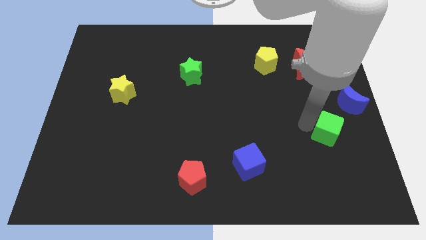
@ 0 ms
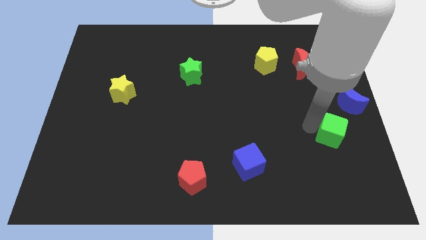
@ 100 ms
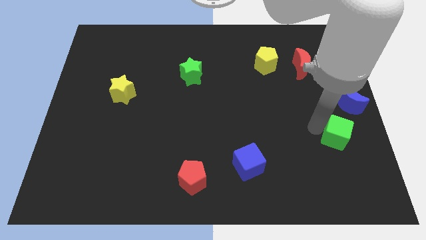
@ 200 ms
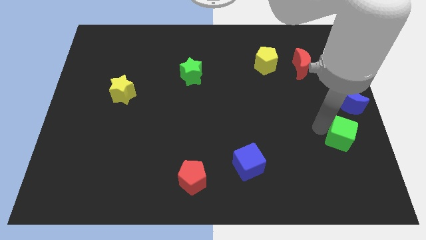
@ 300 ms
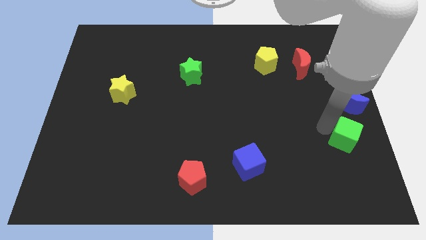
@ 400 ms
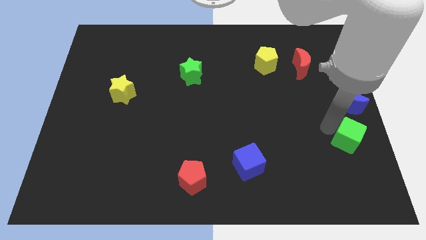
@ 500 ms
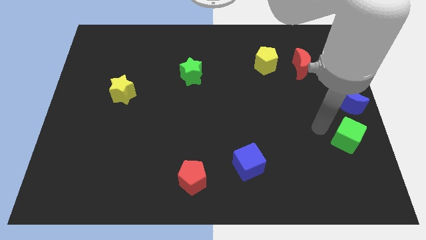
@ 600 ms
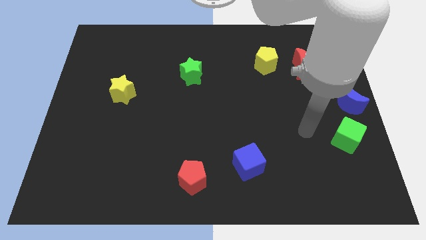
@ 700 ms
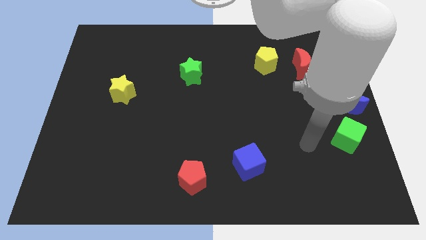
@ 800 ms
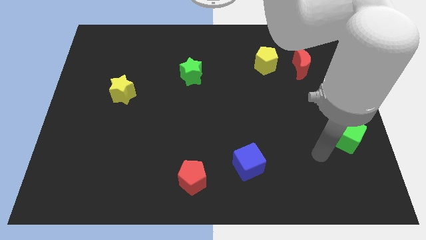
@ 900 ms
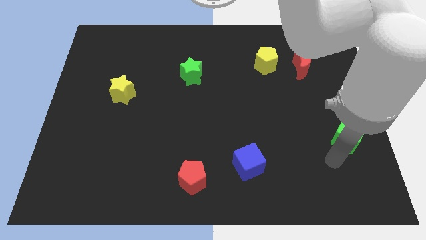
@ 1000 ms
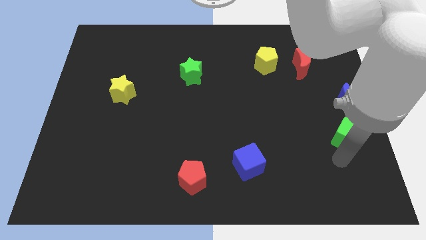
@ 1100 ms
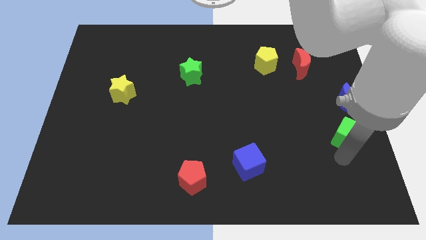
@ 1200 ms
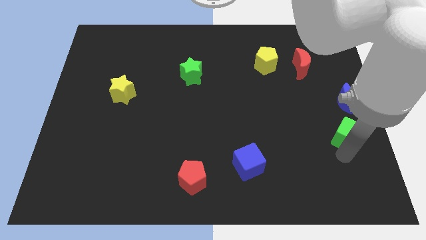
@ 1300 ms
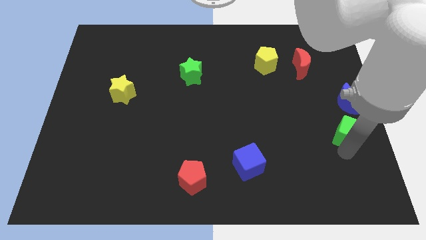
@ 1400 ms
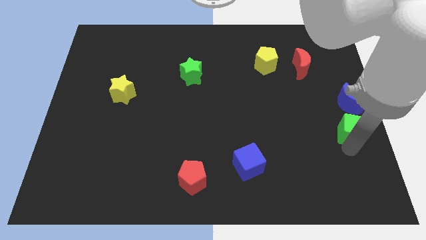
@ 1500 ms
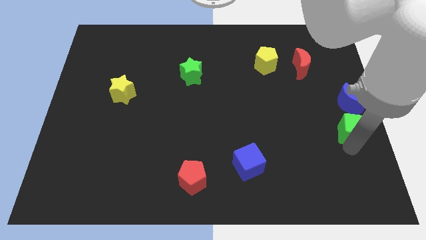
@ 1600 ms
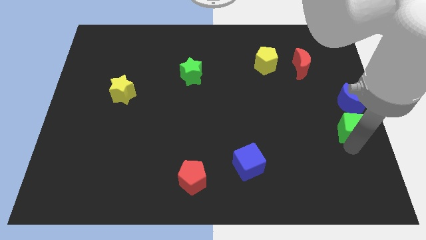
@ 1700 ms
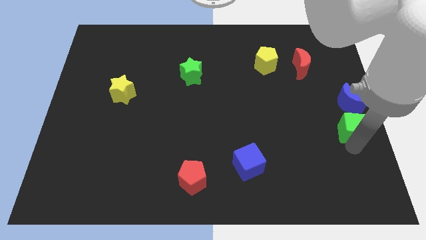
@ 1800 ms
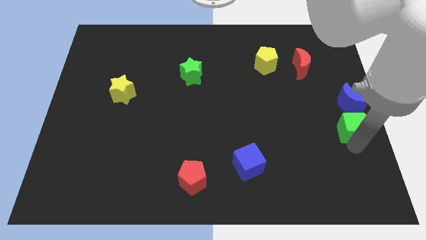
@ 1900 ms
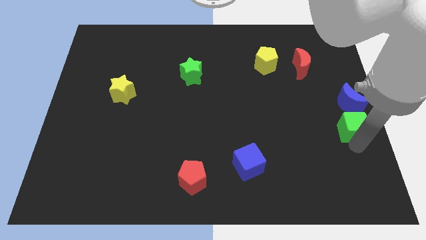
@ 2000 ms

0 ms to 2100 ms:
slide green cube below blue moon

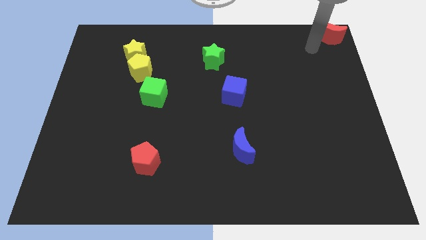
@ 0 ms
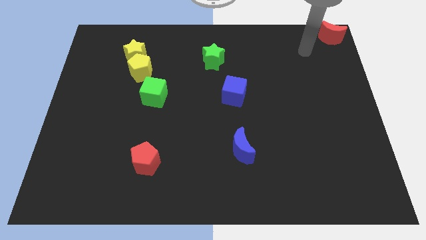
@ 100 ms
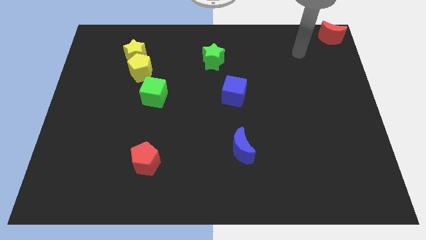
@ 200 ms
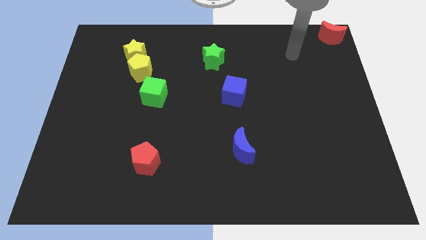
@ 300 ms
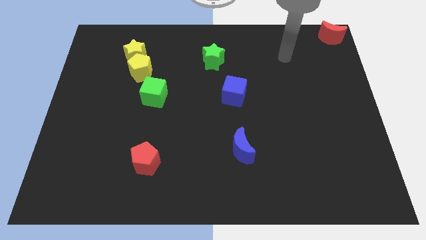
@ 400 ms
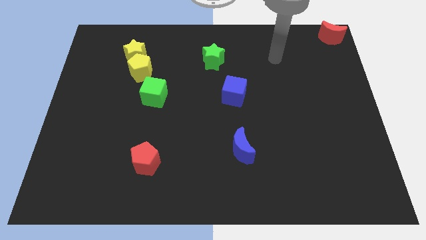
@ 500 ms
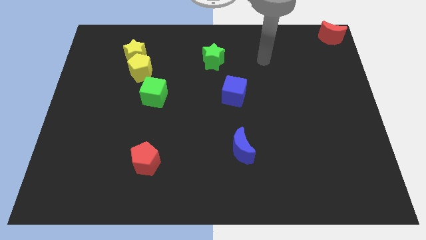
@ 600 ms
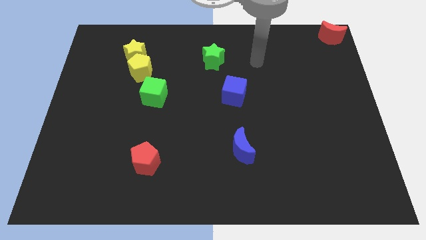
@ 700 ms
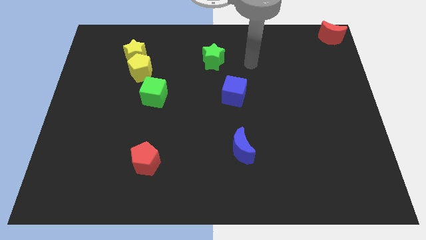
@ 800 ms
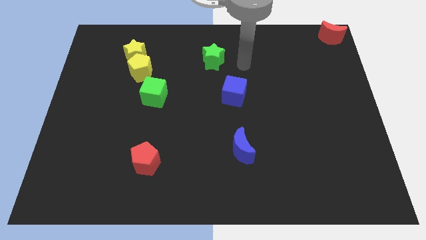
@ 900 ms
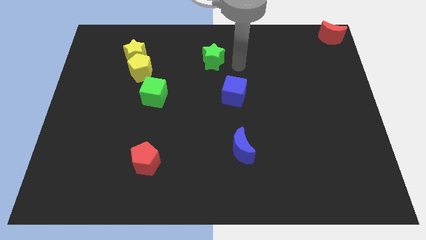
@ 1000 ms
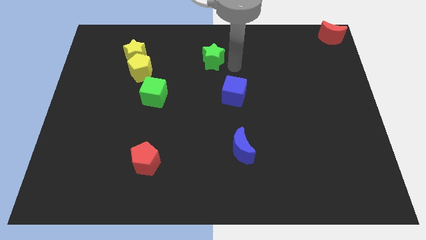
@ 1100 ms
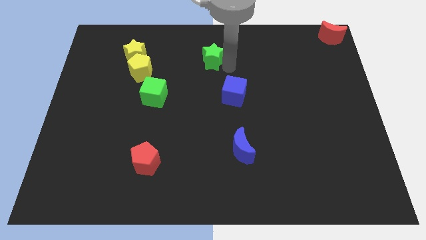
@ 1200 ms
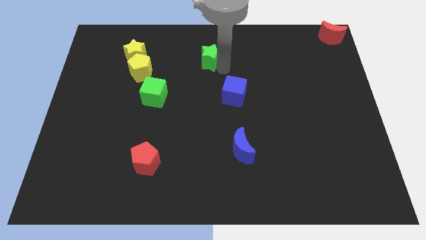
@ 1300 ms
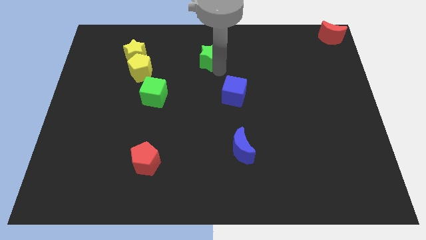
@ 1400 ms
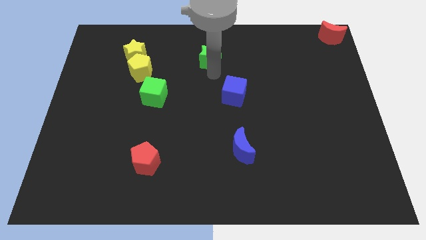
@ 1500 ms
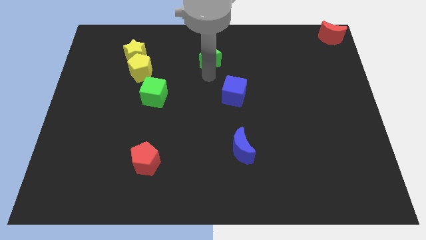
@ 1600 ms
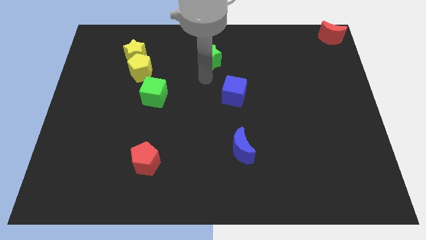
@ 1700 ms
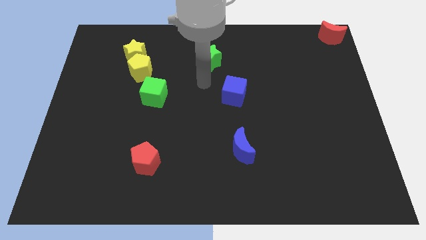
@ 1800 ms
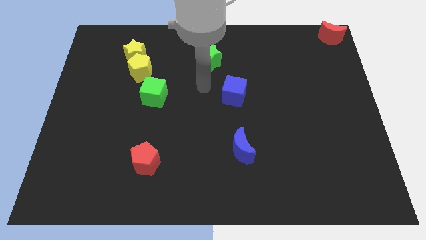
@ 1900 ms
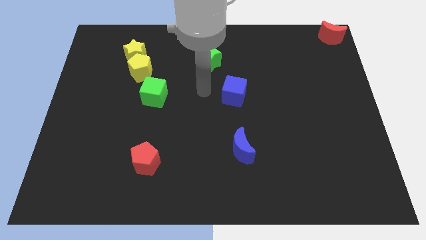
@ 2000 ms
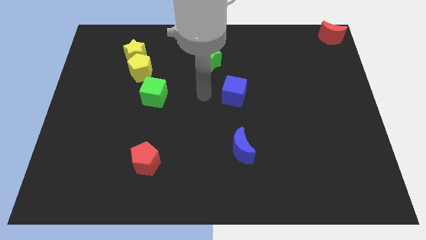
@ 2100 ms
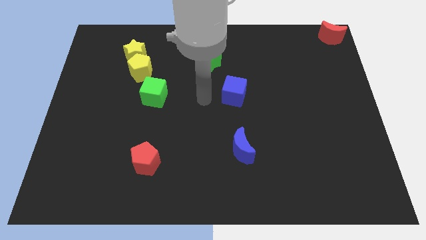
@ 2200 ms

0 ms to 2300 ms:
move the arm to the left of the blue cube

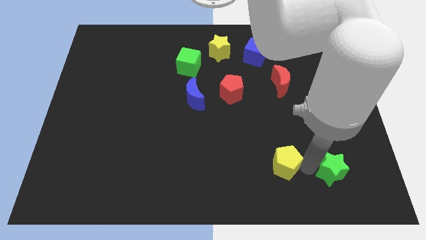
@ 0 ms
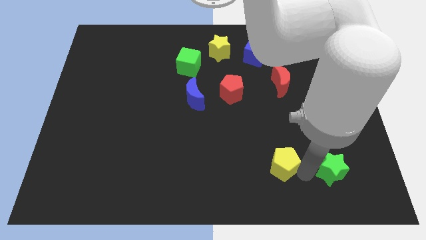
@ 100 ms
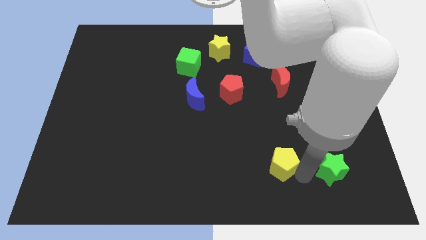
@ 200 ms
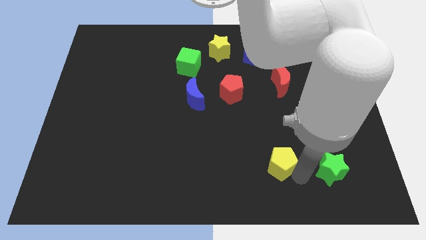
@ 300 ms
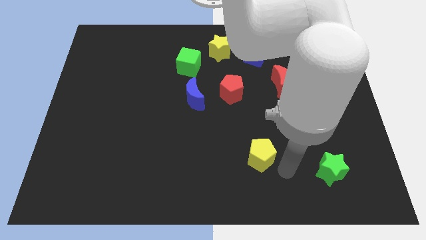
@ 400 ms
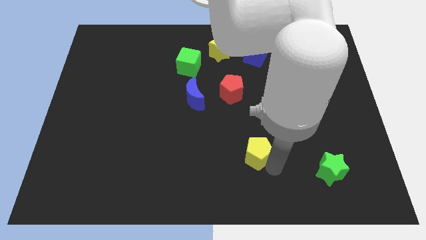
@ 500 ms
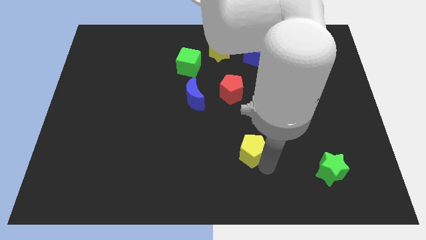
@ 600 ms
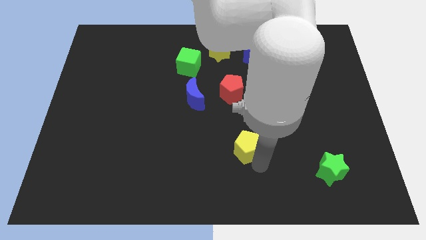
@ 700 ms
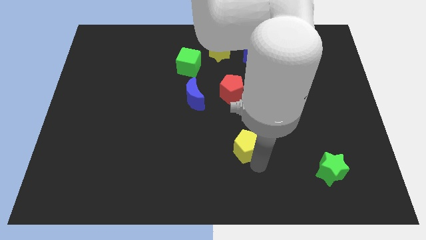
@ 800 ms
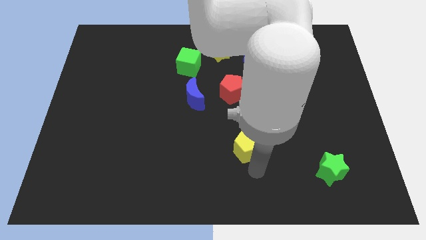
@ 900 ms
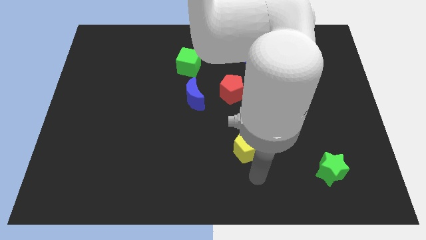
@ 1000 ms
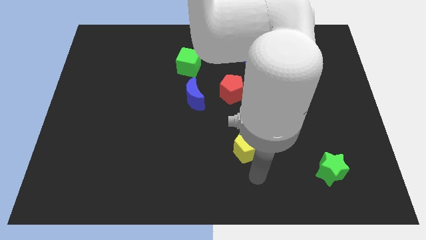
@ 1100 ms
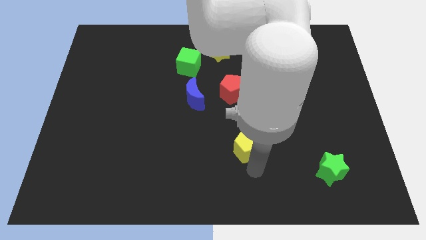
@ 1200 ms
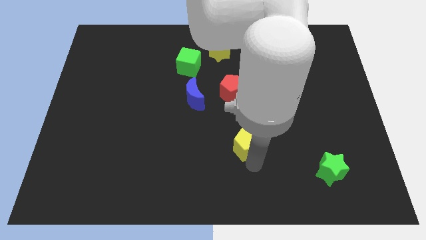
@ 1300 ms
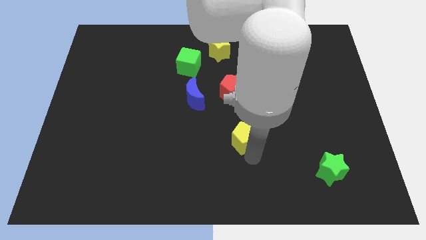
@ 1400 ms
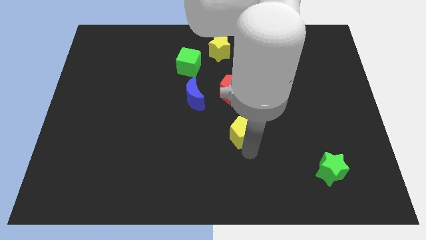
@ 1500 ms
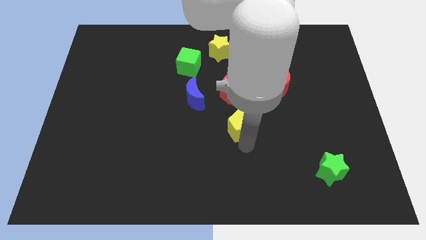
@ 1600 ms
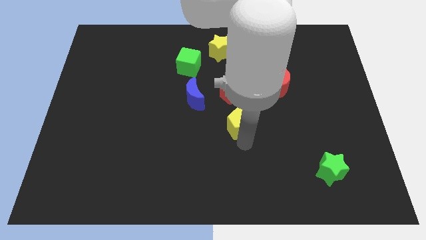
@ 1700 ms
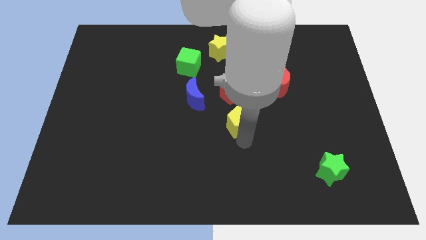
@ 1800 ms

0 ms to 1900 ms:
push yellow pentagon upwards

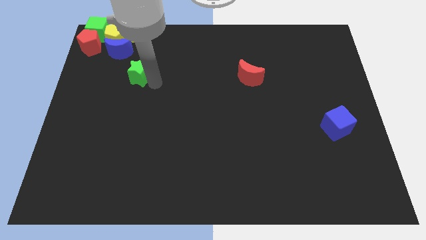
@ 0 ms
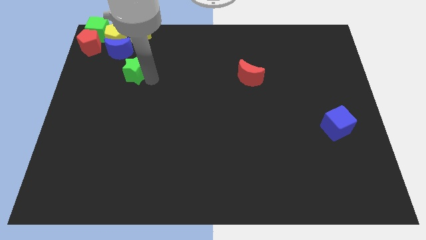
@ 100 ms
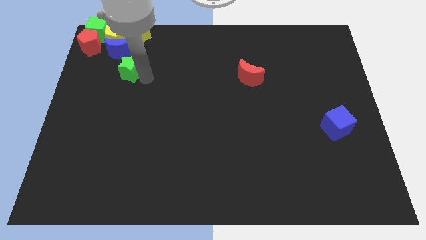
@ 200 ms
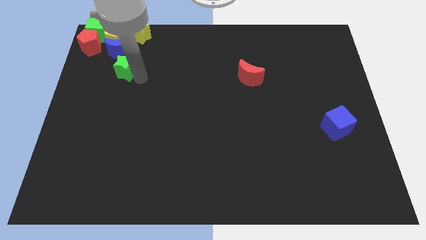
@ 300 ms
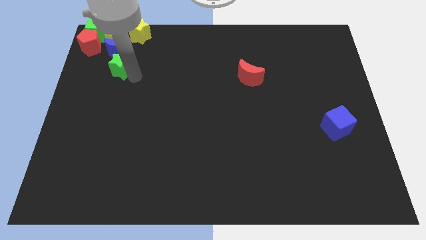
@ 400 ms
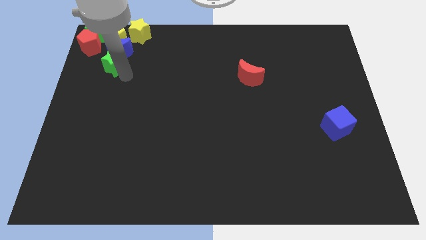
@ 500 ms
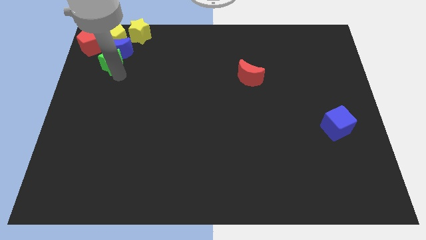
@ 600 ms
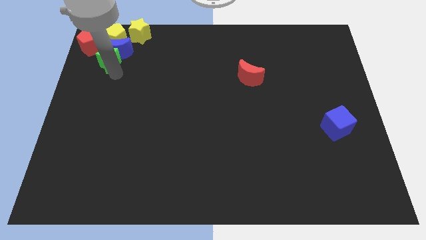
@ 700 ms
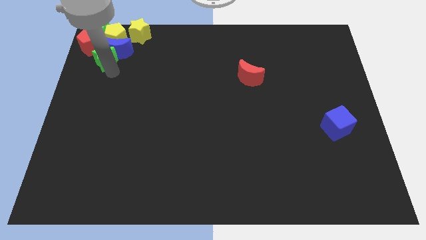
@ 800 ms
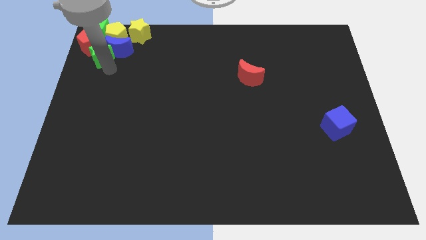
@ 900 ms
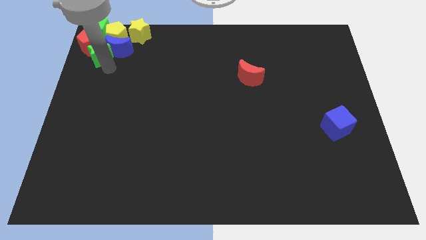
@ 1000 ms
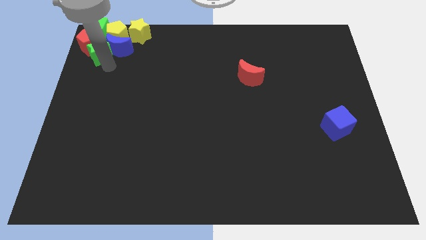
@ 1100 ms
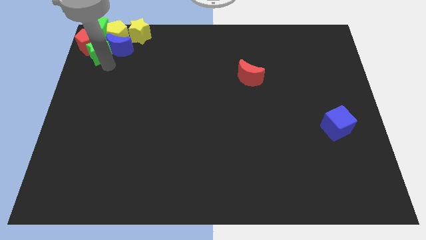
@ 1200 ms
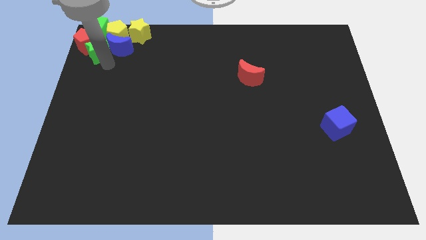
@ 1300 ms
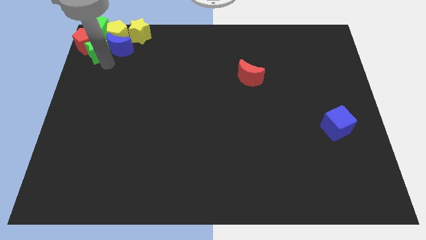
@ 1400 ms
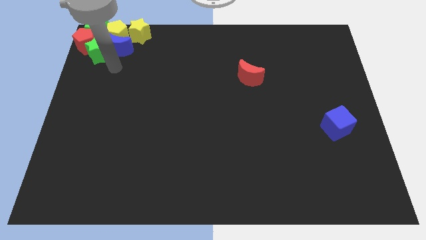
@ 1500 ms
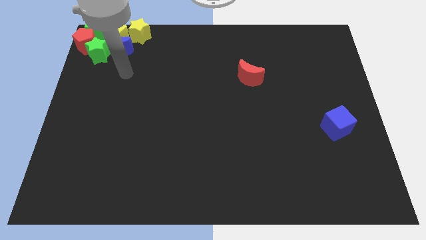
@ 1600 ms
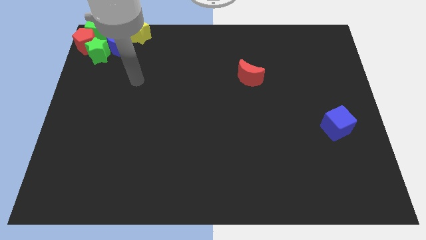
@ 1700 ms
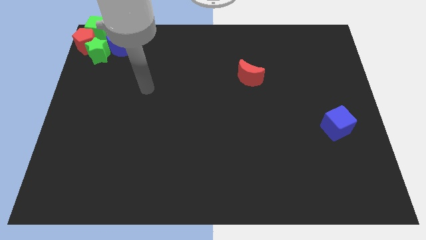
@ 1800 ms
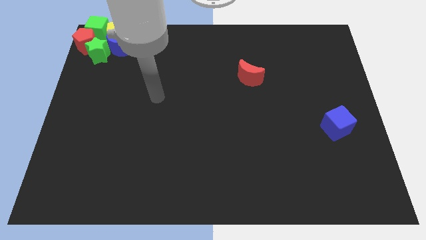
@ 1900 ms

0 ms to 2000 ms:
push the green star towards the red pentagon

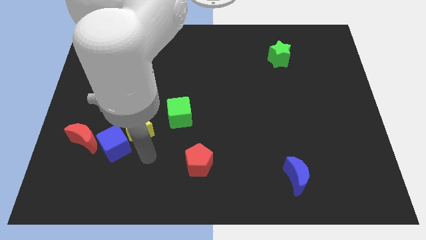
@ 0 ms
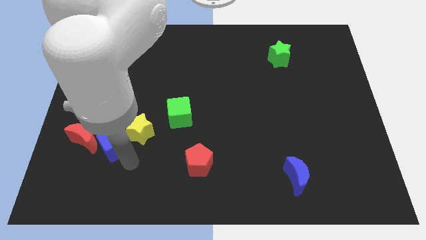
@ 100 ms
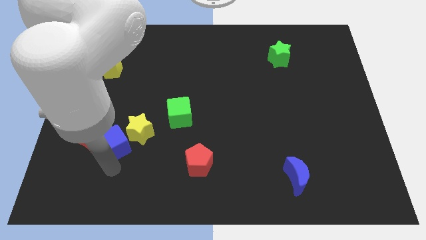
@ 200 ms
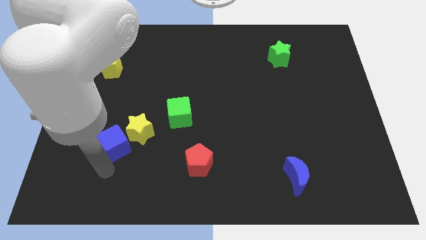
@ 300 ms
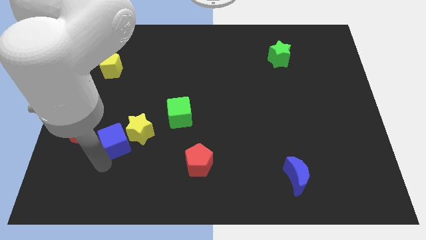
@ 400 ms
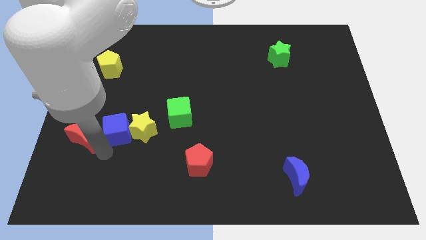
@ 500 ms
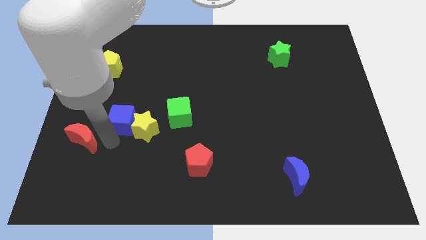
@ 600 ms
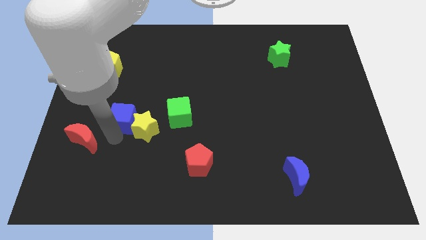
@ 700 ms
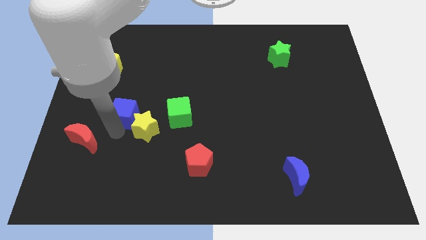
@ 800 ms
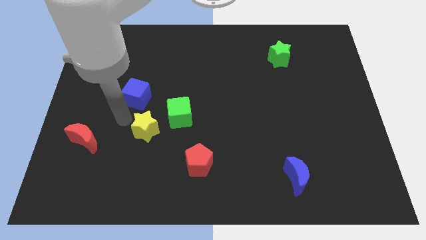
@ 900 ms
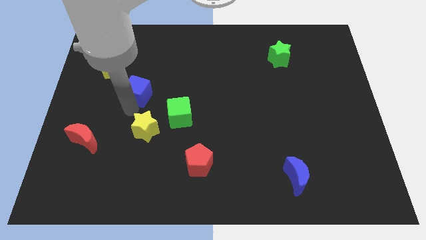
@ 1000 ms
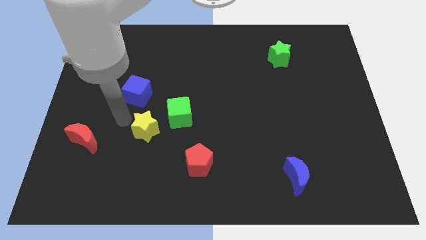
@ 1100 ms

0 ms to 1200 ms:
place blue cube above the yellow star
